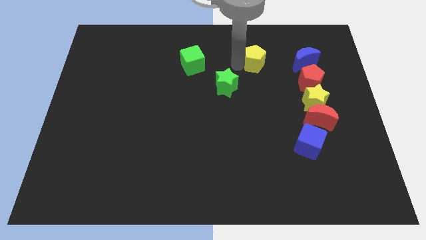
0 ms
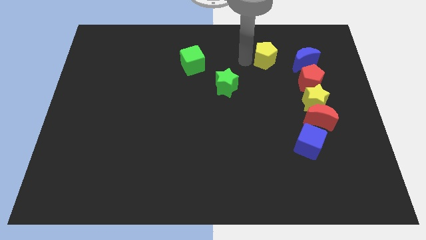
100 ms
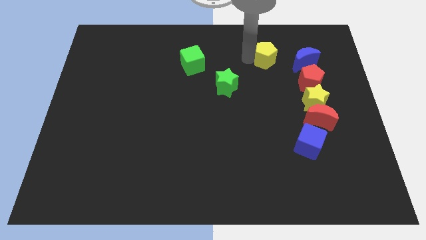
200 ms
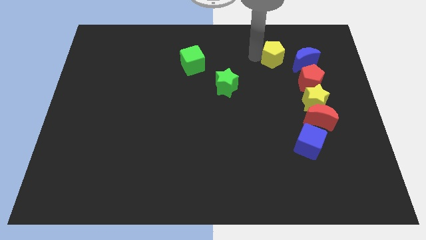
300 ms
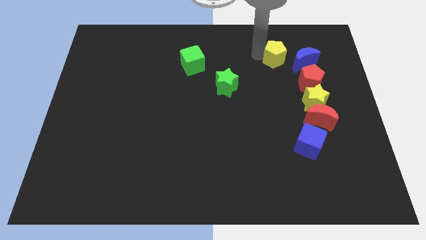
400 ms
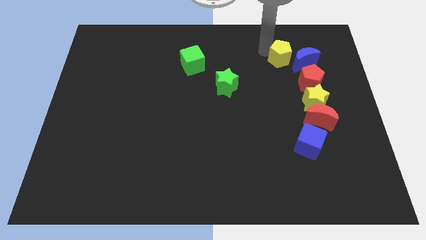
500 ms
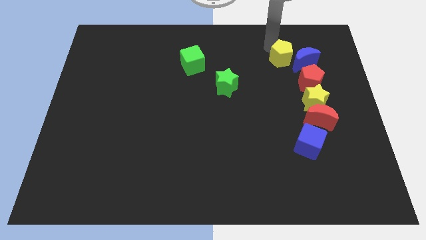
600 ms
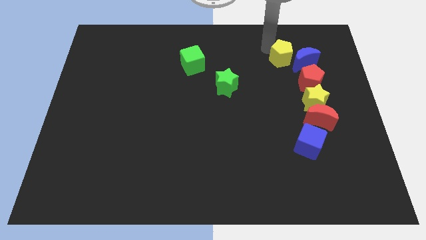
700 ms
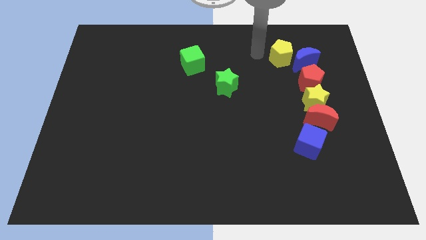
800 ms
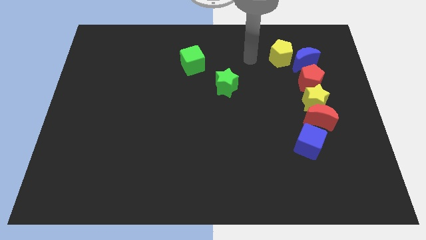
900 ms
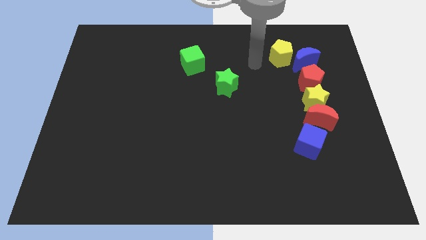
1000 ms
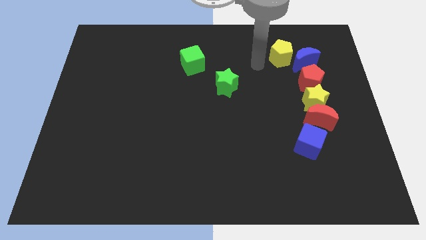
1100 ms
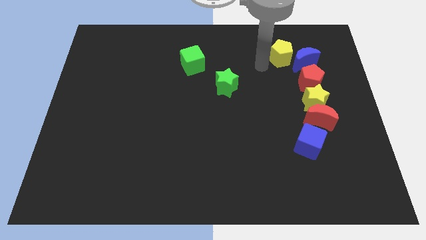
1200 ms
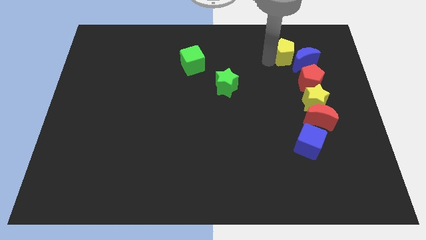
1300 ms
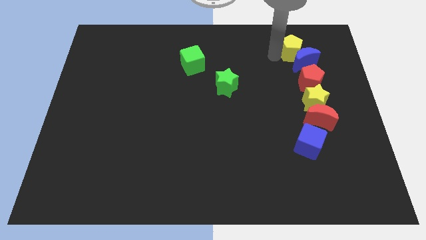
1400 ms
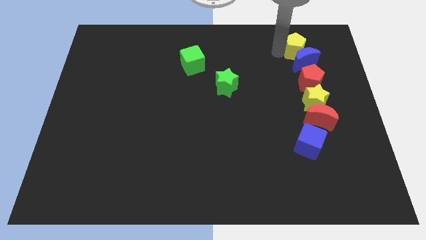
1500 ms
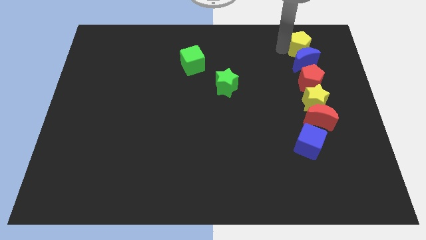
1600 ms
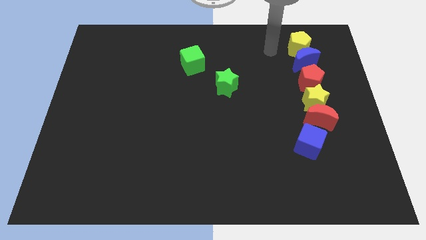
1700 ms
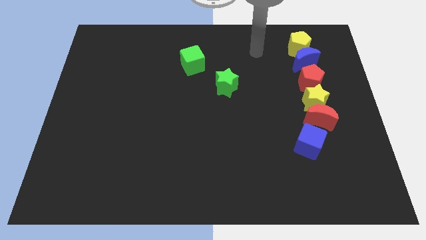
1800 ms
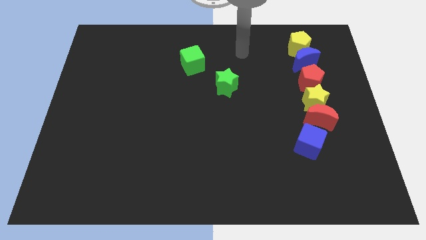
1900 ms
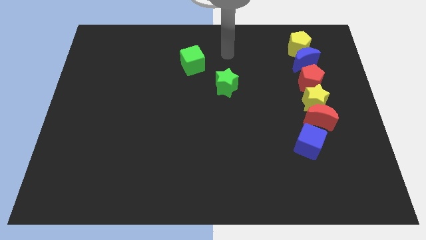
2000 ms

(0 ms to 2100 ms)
place yellow pentagon on top of blue moon

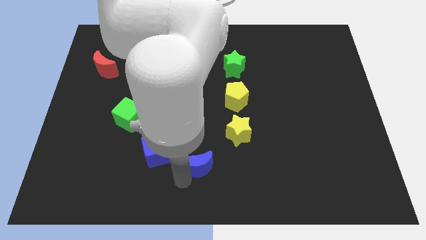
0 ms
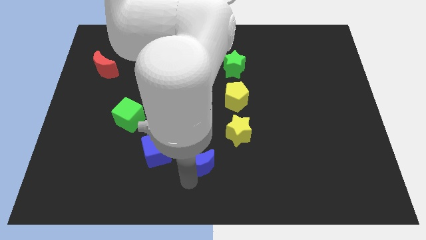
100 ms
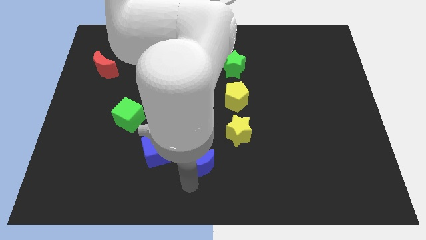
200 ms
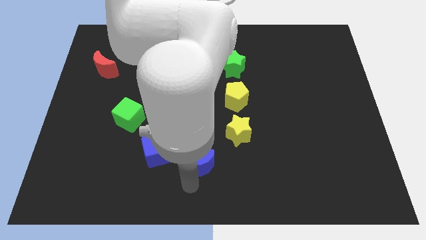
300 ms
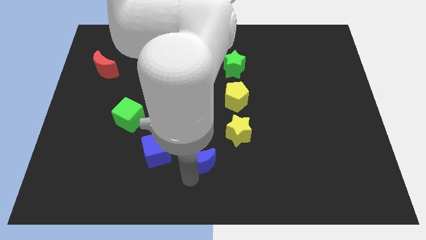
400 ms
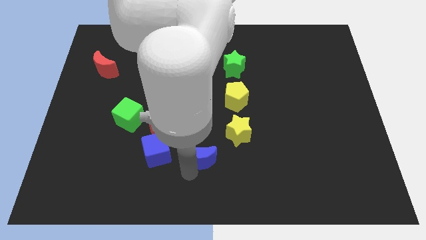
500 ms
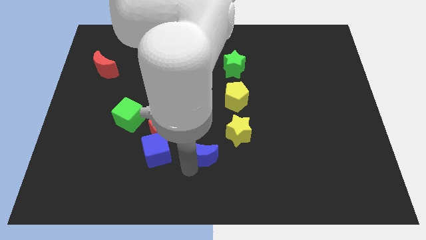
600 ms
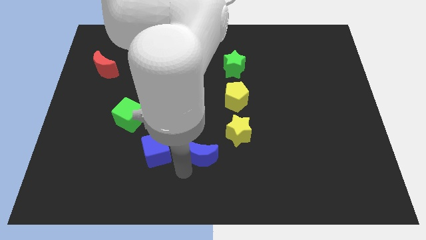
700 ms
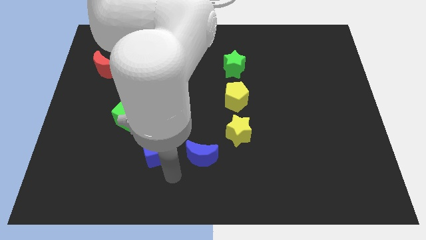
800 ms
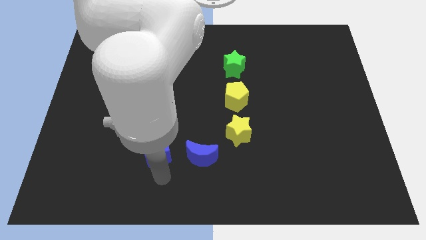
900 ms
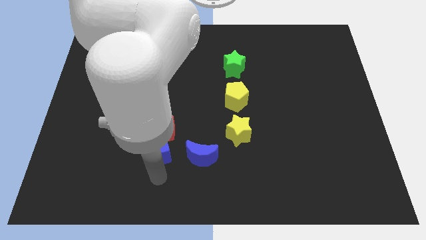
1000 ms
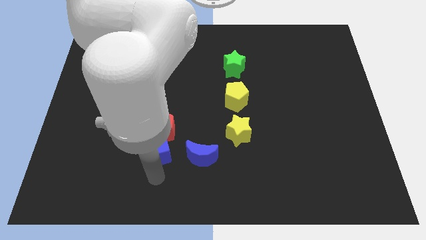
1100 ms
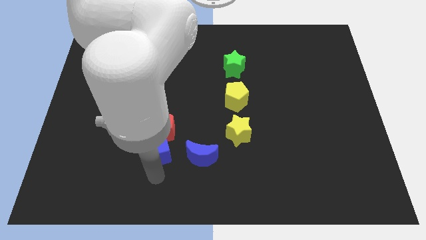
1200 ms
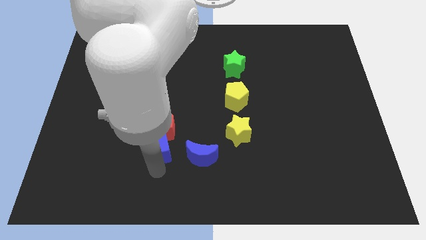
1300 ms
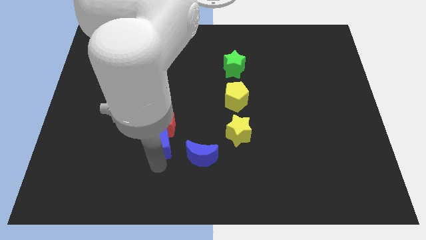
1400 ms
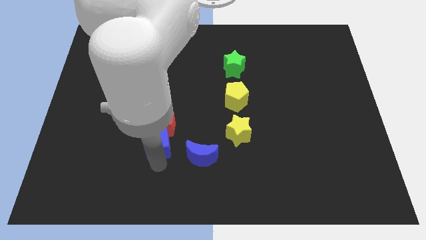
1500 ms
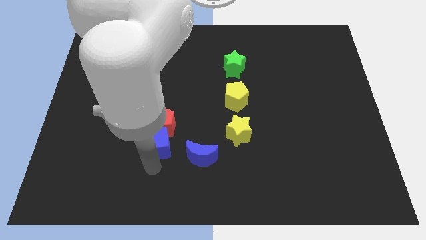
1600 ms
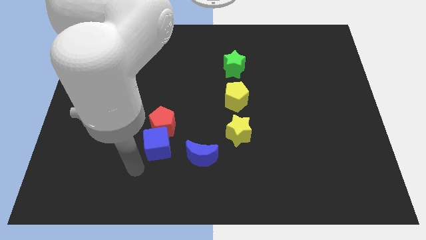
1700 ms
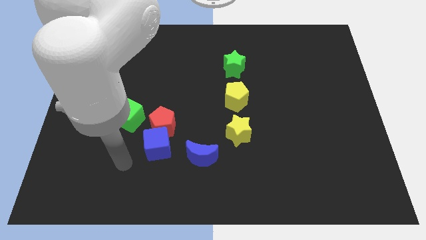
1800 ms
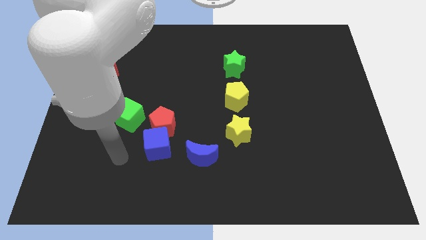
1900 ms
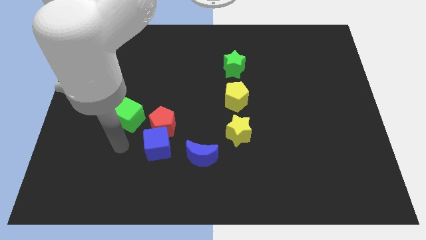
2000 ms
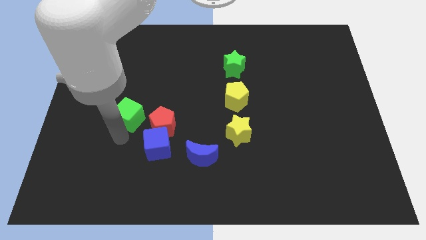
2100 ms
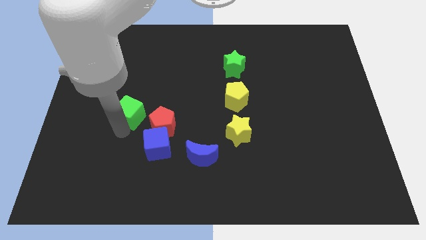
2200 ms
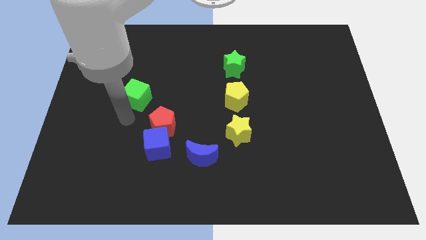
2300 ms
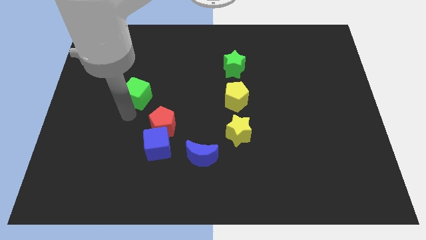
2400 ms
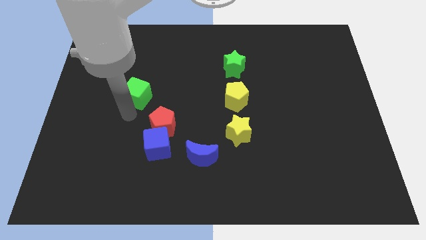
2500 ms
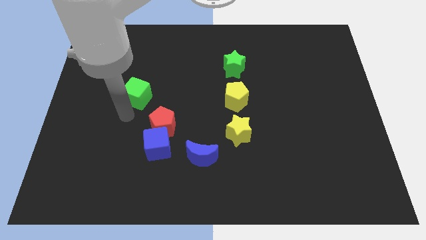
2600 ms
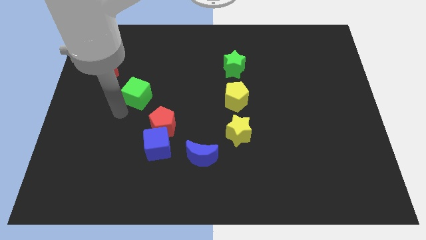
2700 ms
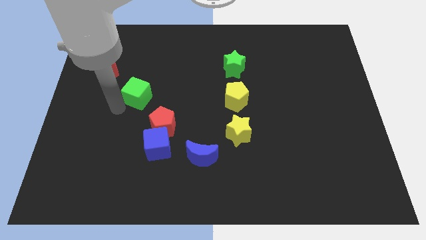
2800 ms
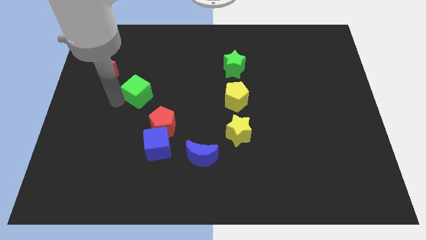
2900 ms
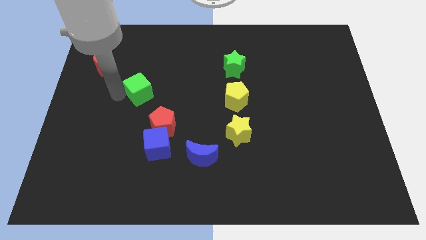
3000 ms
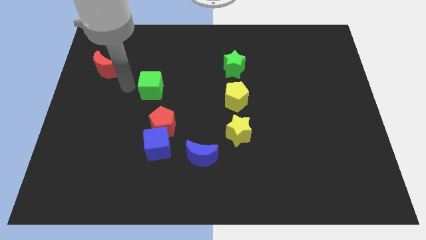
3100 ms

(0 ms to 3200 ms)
push the green cube towards the top

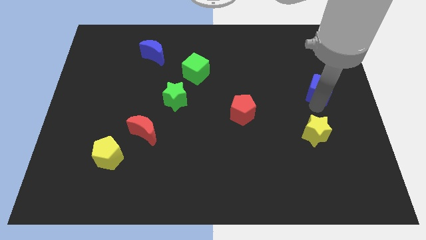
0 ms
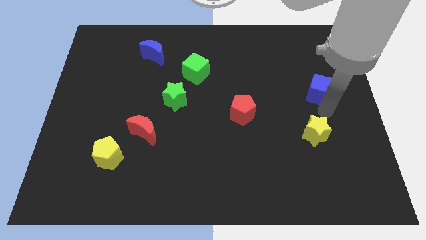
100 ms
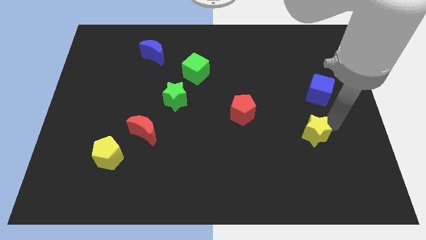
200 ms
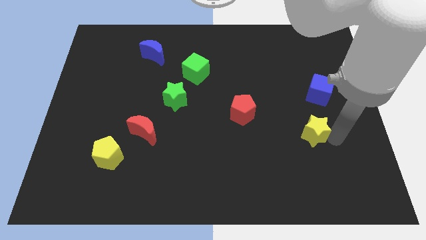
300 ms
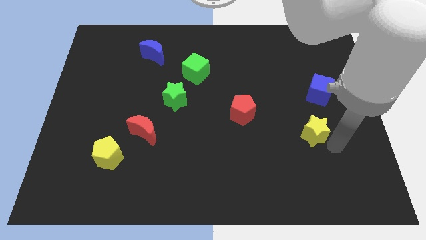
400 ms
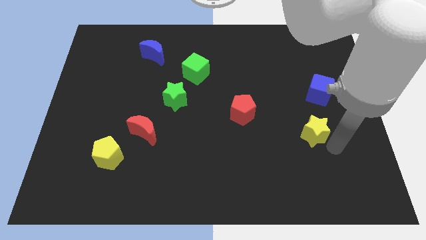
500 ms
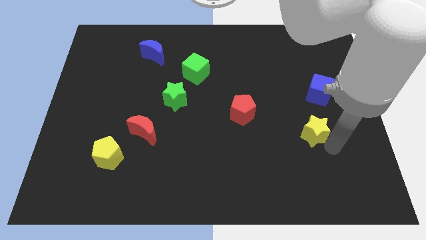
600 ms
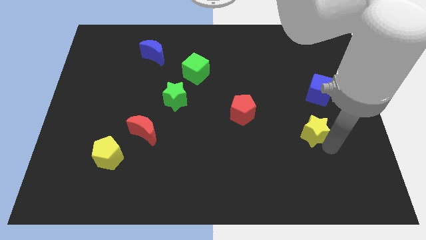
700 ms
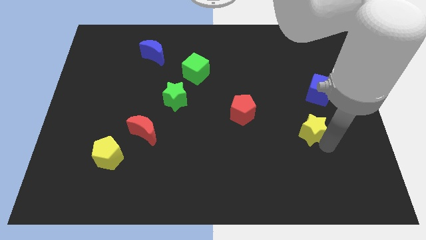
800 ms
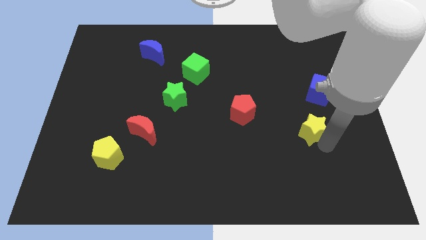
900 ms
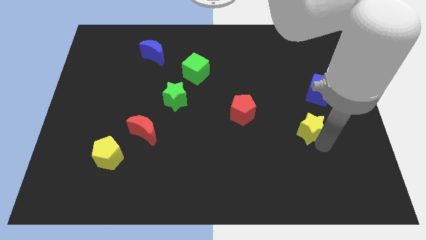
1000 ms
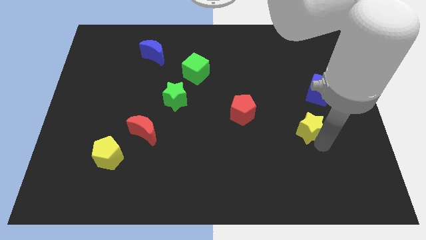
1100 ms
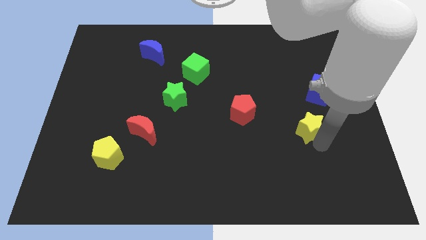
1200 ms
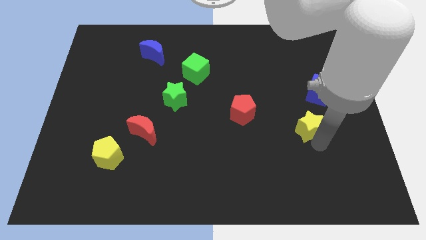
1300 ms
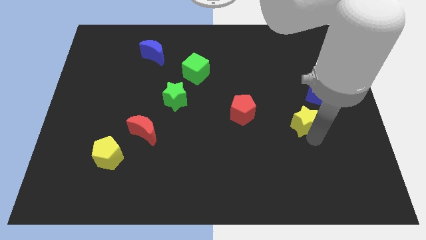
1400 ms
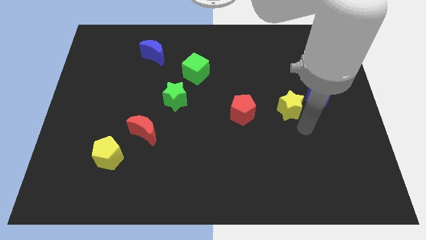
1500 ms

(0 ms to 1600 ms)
push the yellow star up slightly

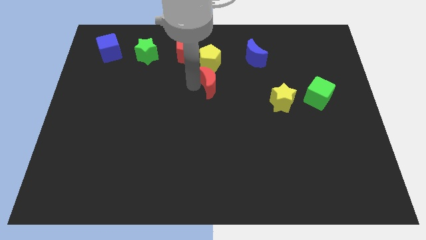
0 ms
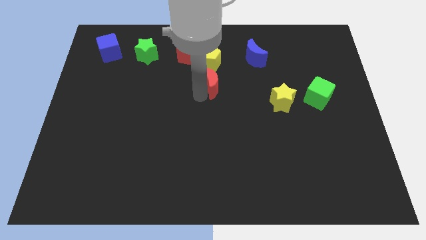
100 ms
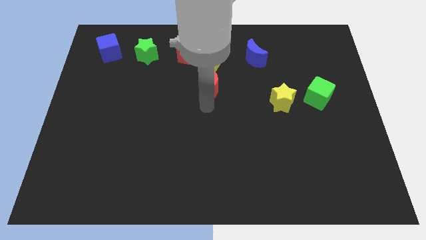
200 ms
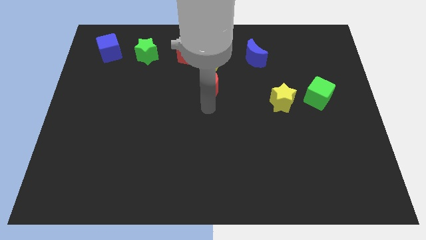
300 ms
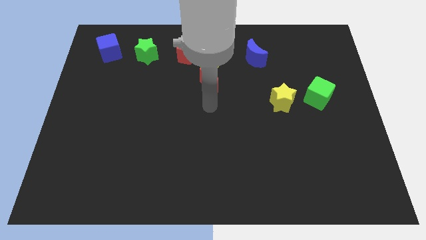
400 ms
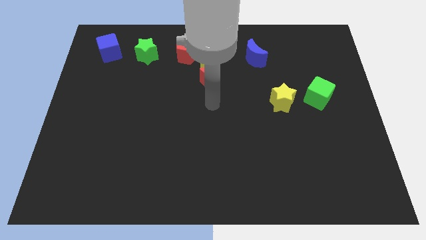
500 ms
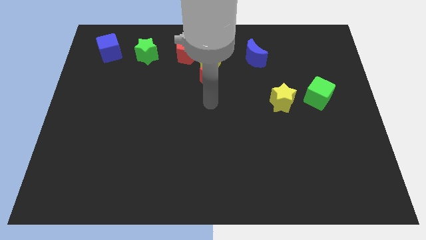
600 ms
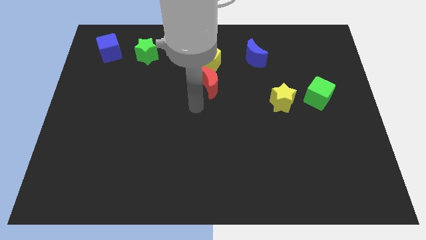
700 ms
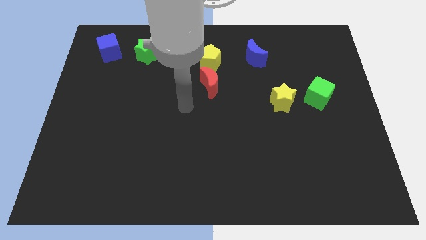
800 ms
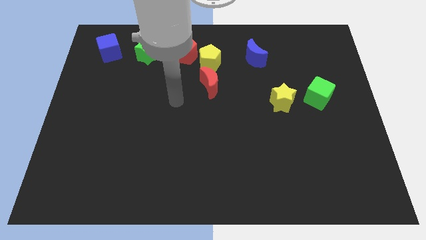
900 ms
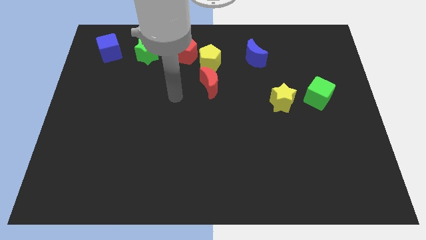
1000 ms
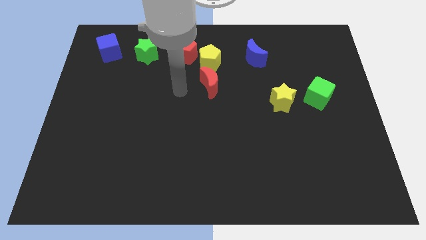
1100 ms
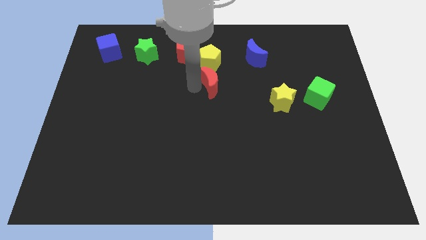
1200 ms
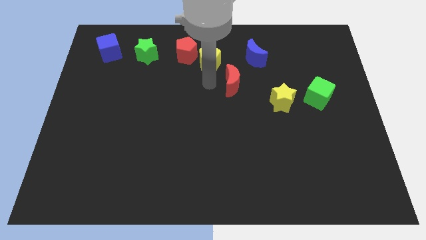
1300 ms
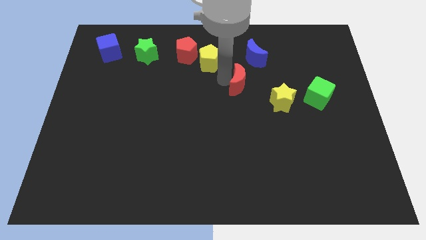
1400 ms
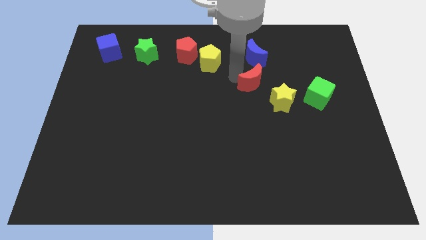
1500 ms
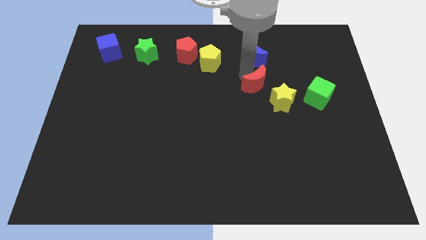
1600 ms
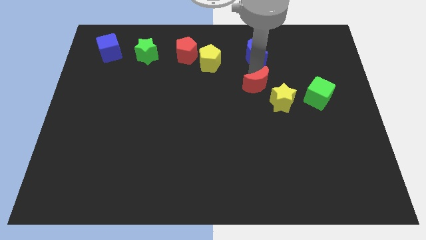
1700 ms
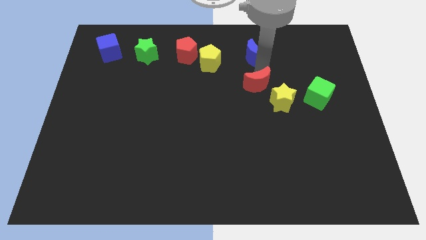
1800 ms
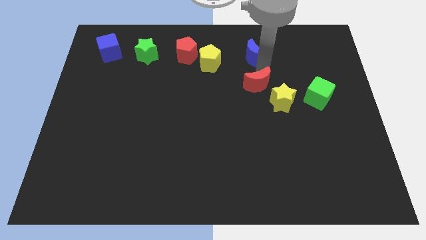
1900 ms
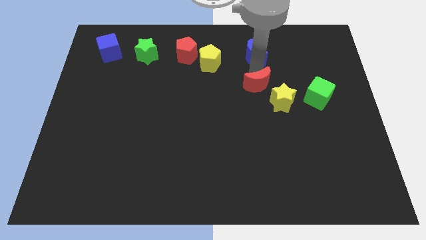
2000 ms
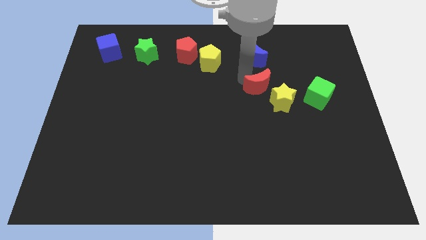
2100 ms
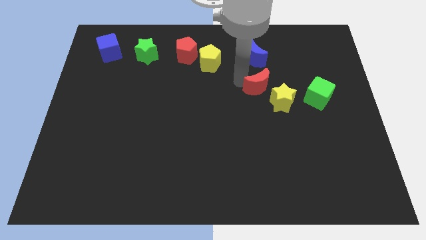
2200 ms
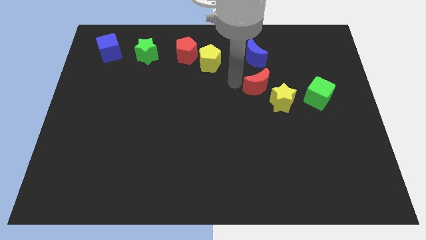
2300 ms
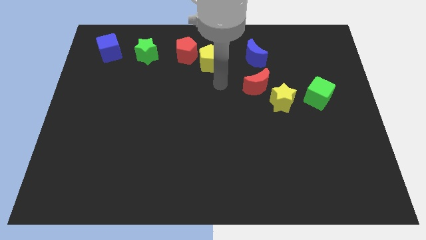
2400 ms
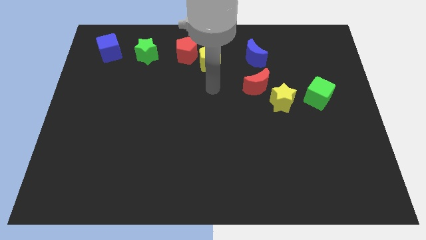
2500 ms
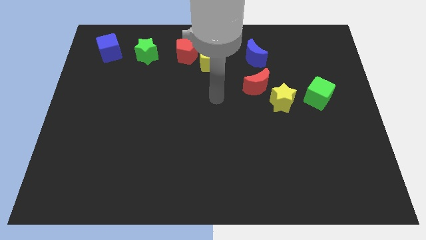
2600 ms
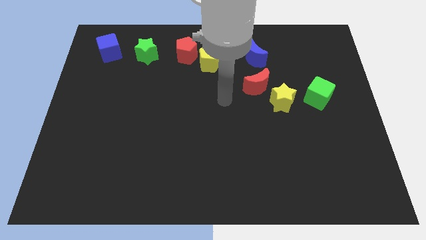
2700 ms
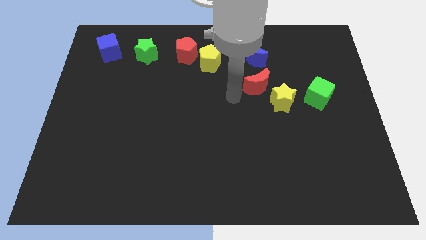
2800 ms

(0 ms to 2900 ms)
move the red moon diagonally top left of the yellow star
